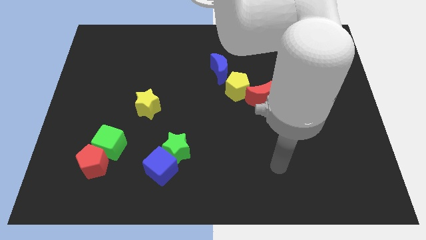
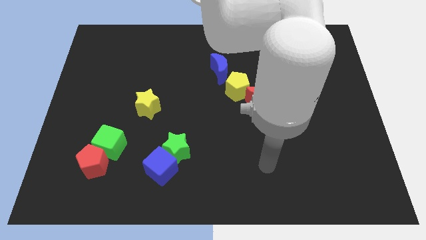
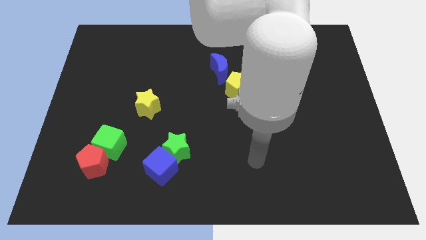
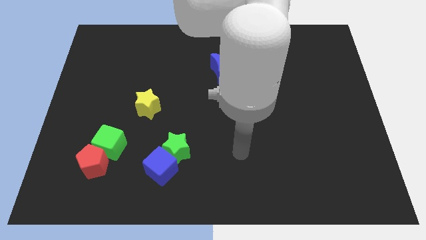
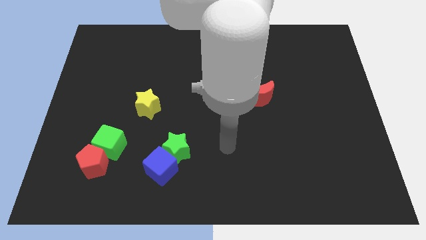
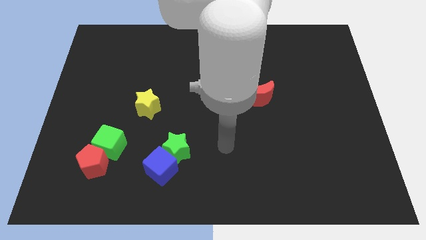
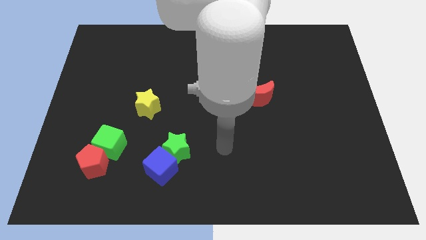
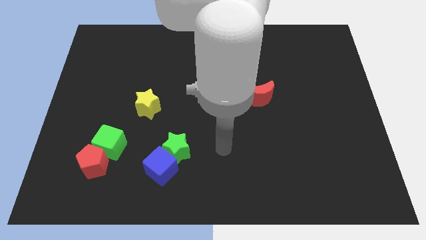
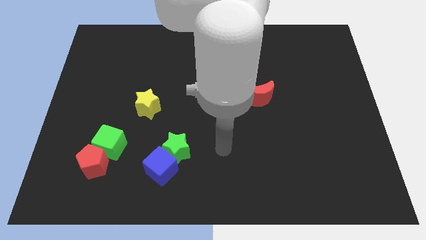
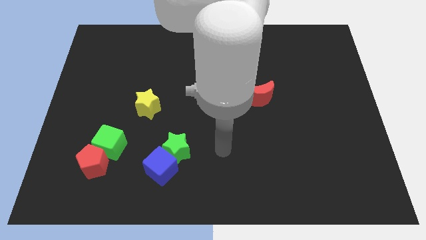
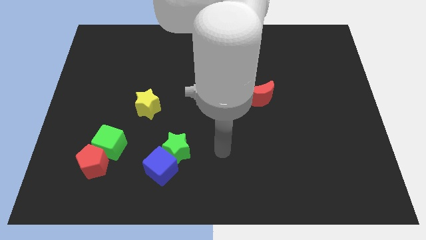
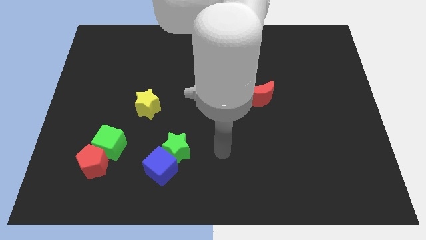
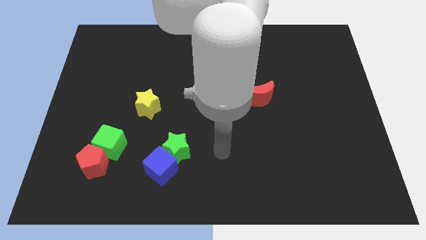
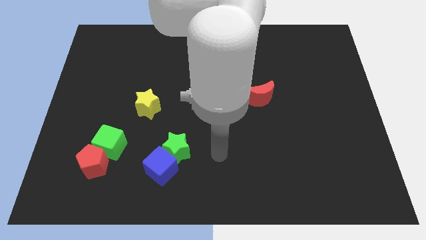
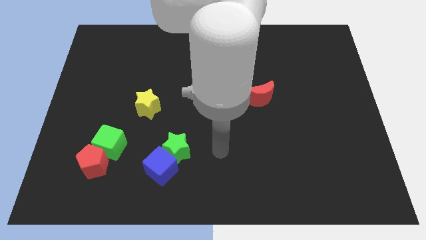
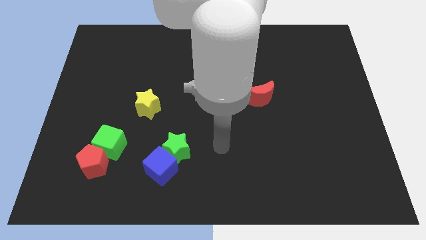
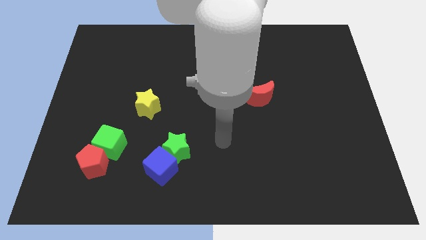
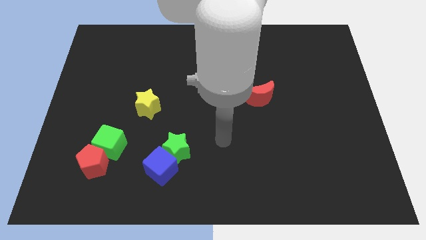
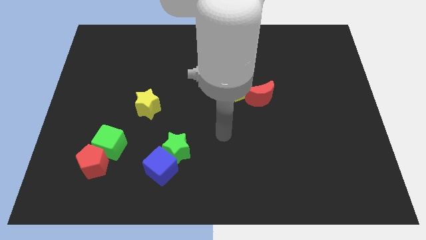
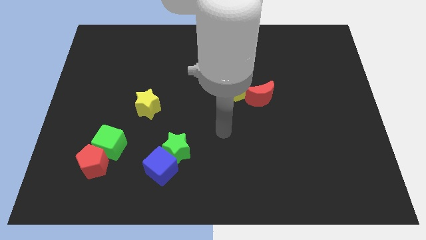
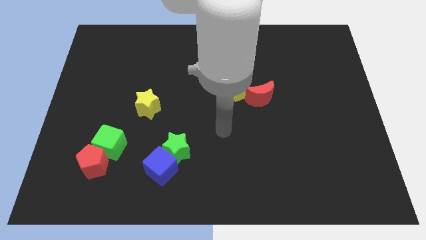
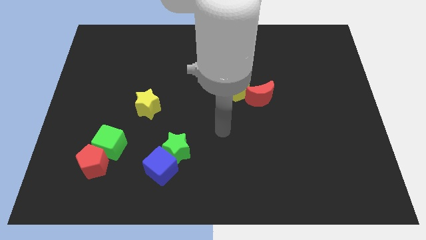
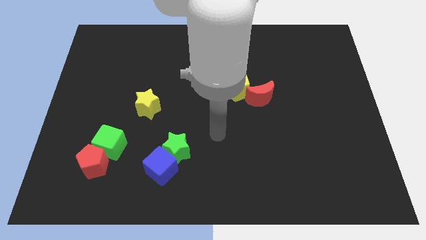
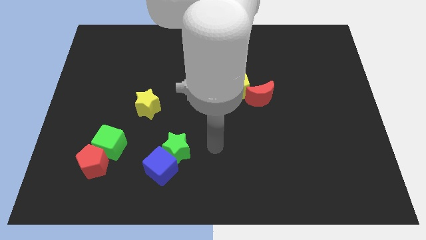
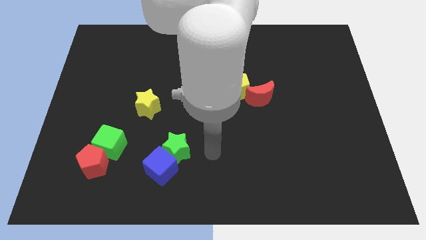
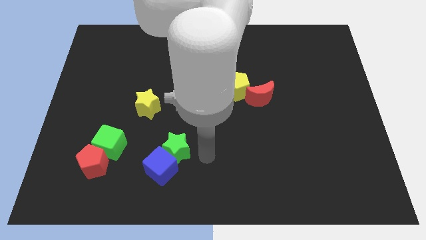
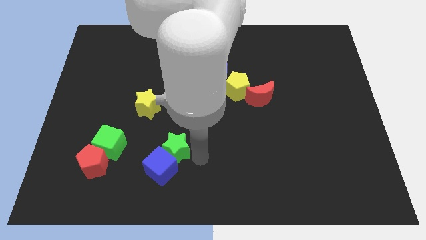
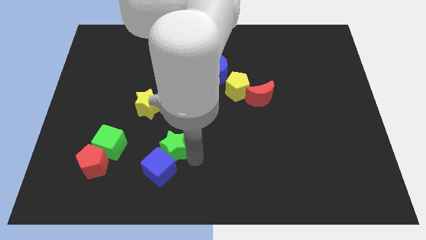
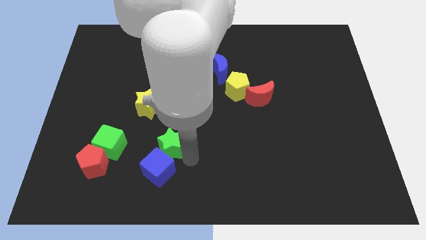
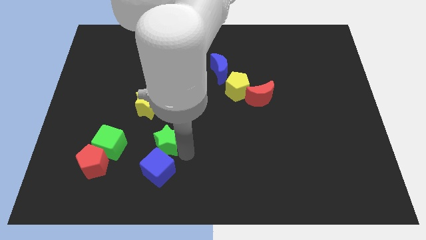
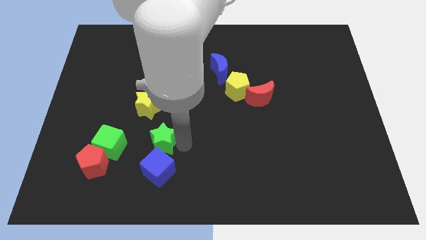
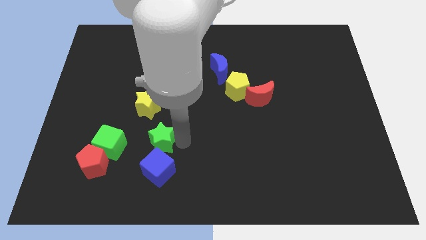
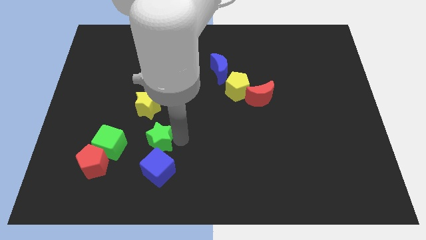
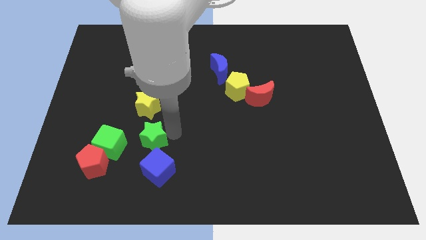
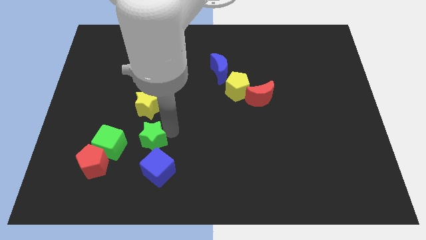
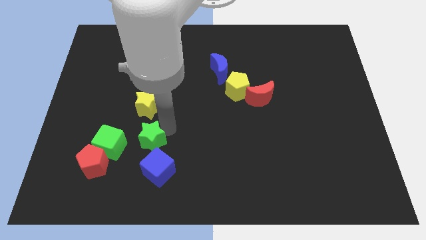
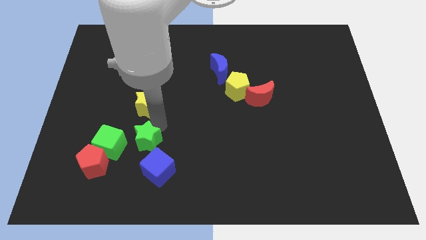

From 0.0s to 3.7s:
push green star below yellow star

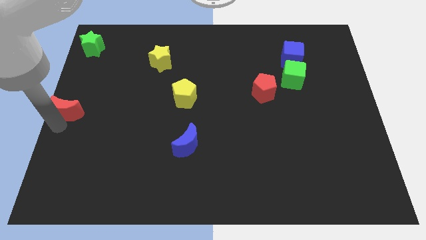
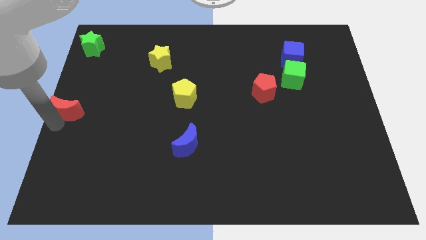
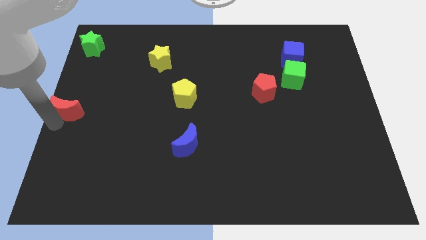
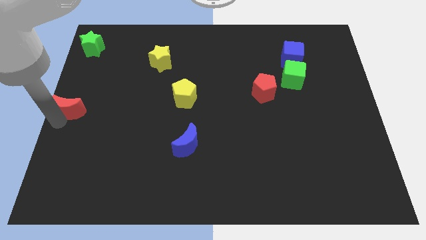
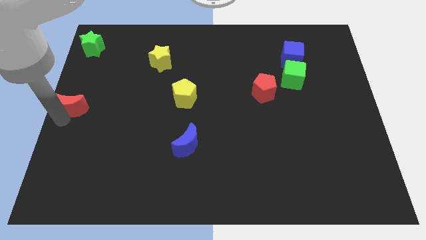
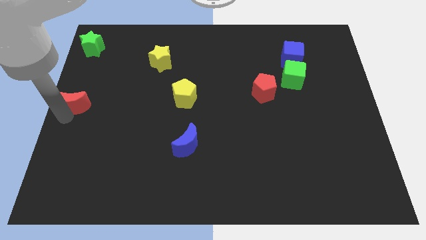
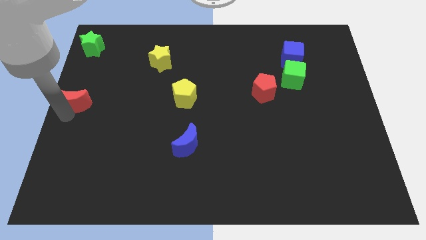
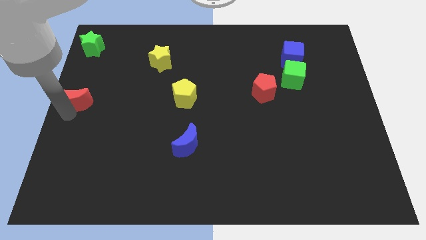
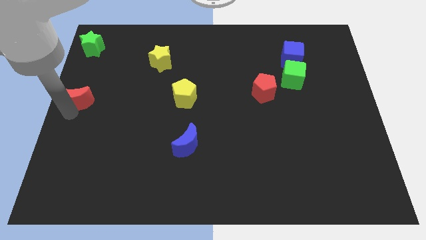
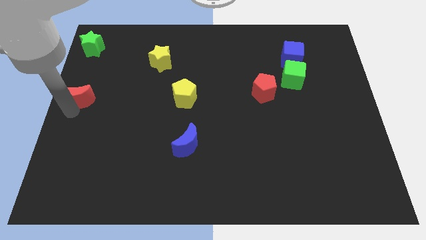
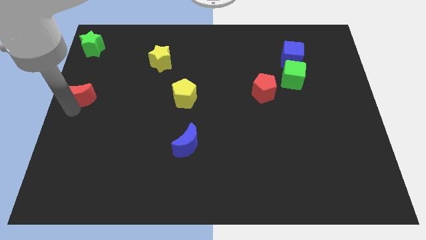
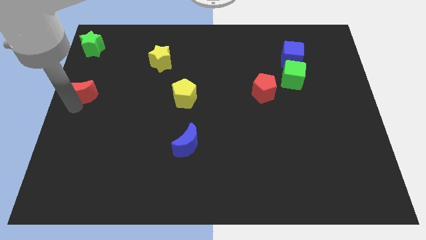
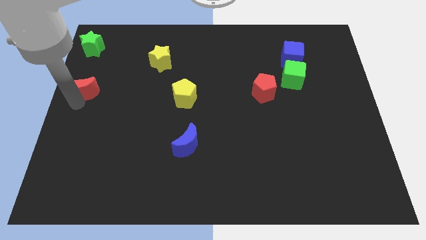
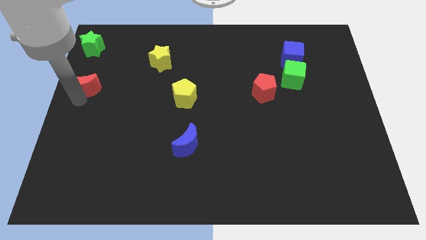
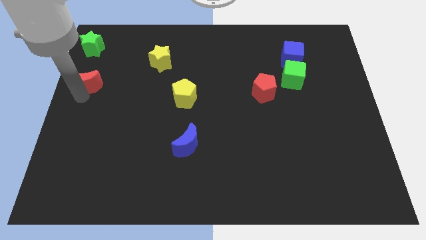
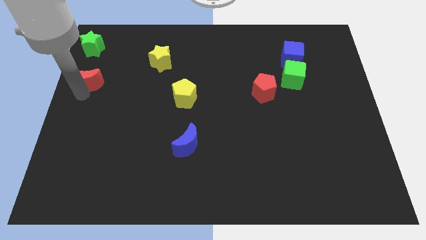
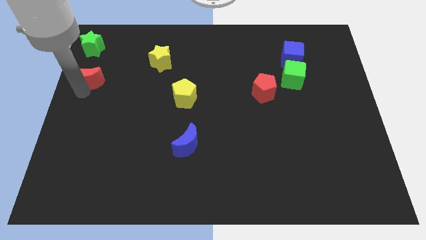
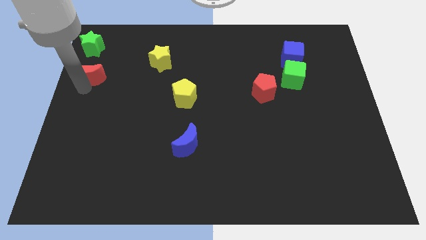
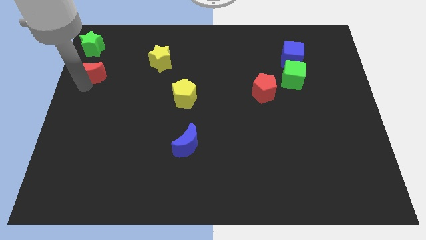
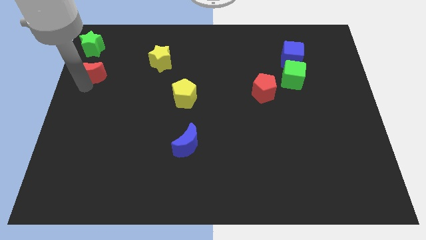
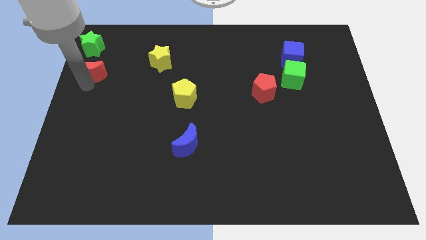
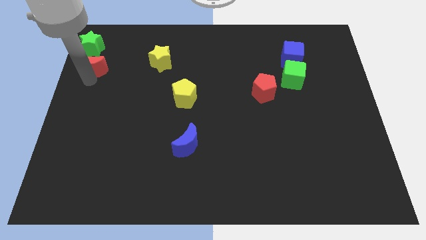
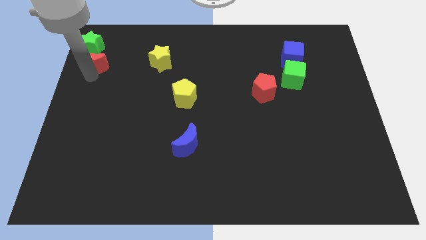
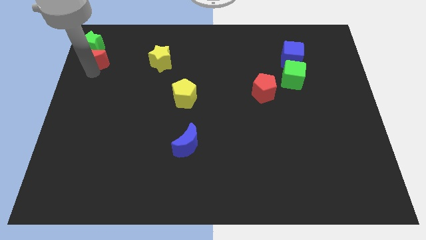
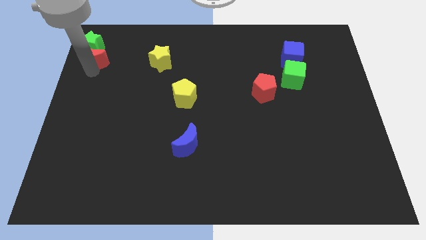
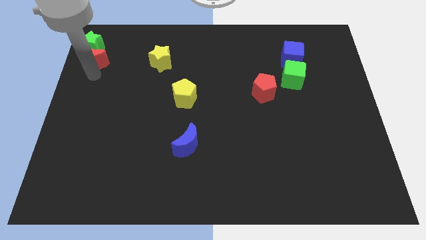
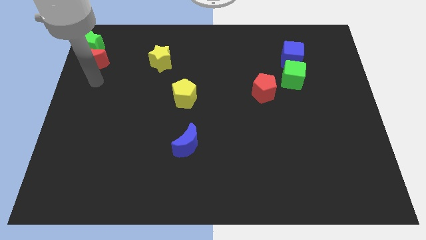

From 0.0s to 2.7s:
move the red moon below the green star

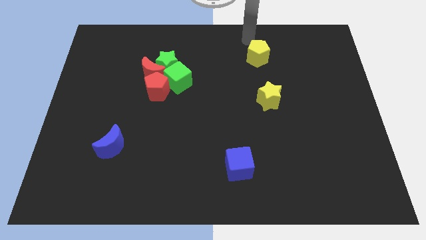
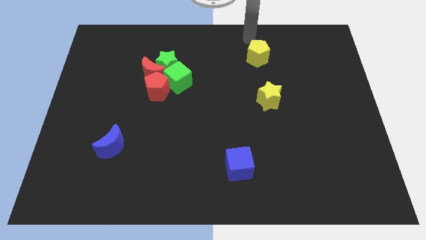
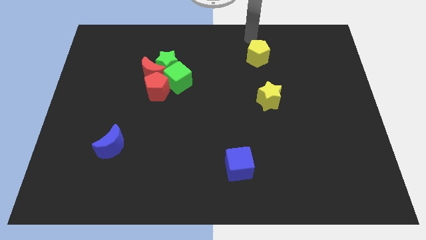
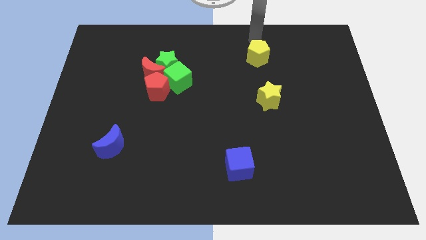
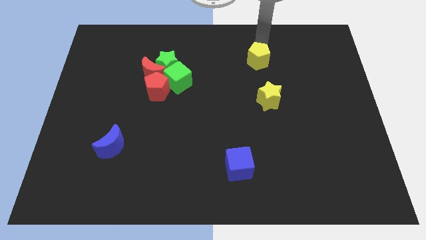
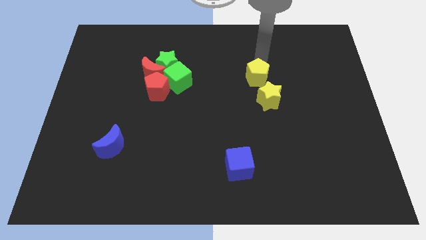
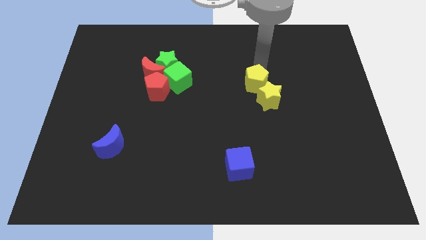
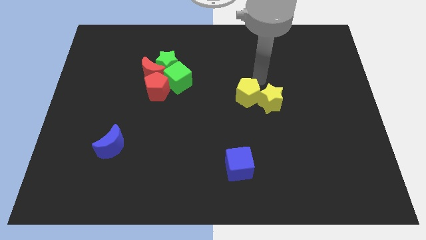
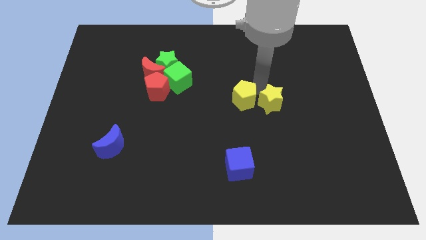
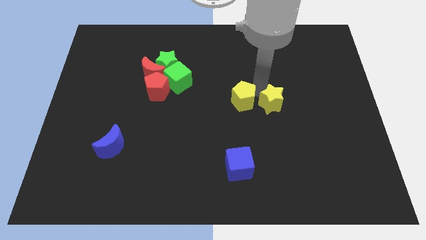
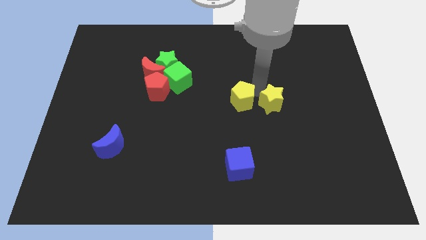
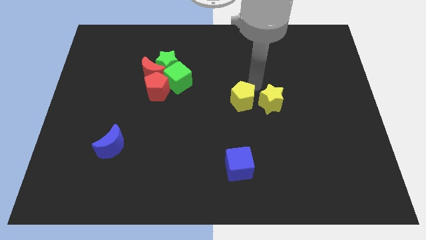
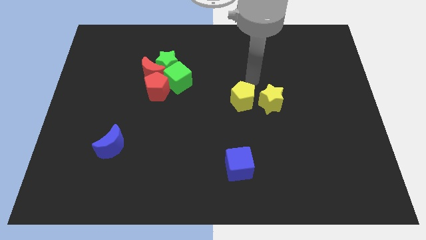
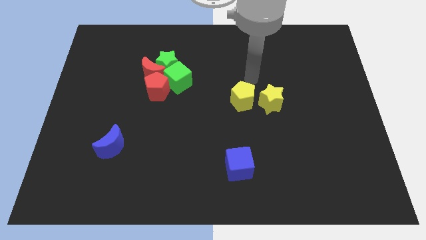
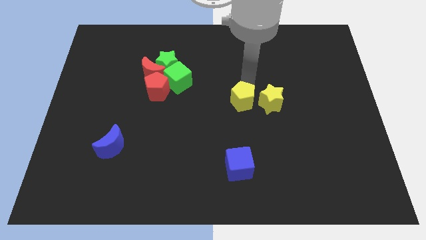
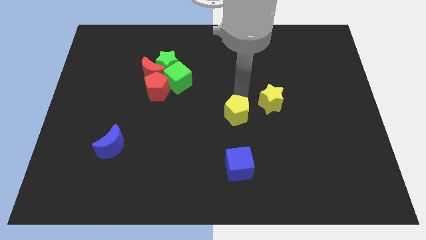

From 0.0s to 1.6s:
place the yellow pentagon to the left side of the yellow star

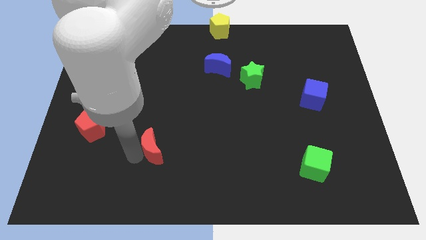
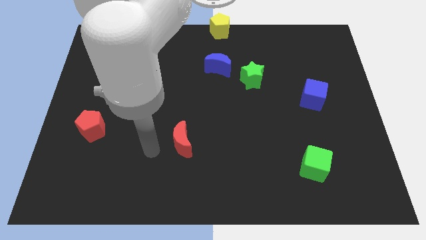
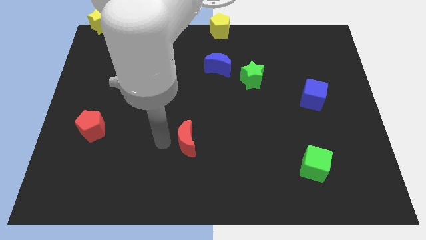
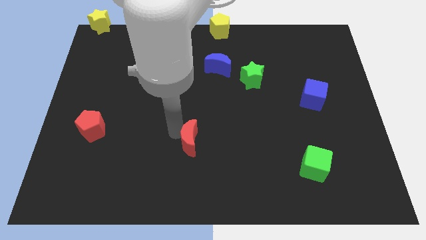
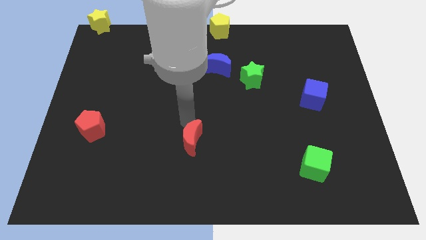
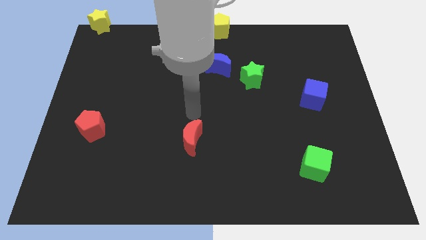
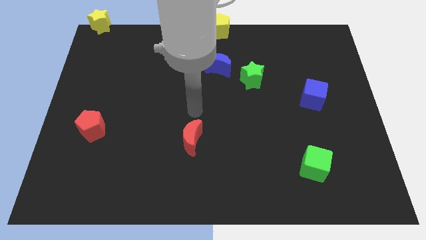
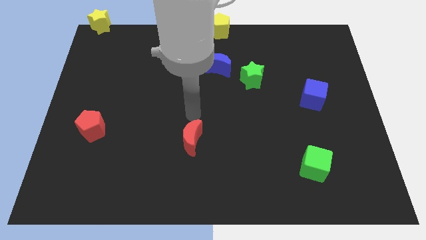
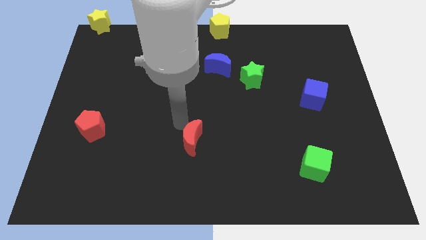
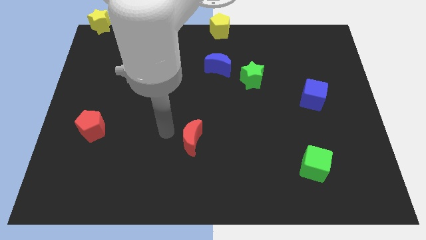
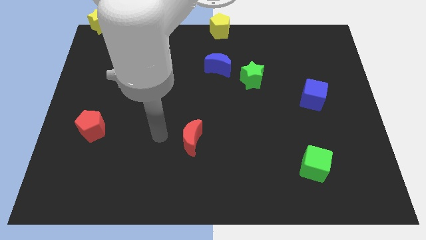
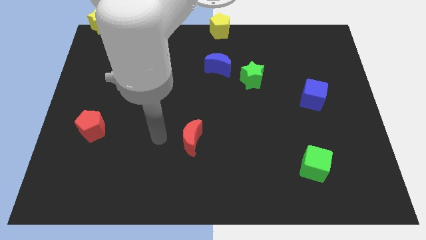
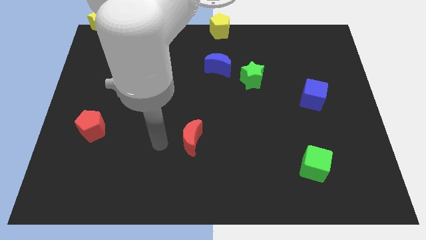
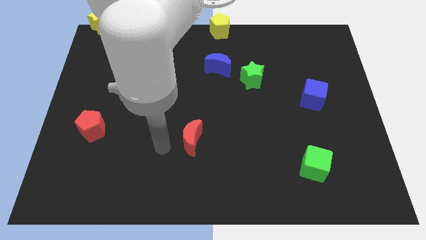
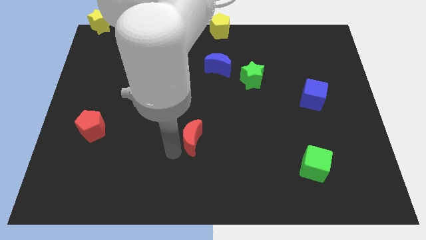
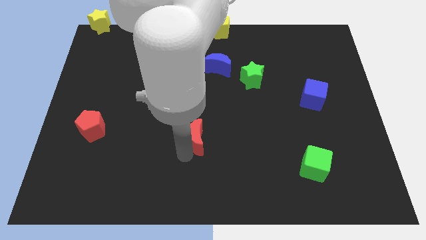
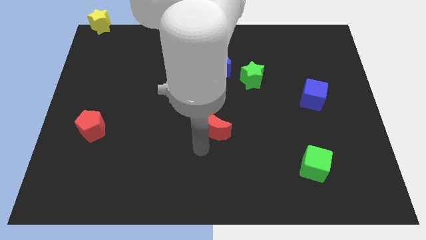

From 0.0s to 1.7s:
move the red crescent to the bottom side of the blue crescent
